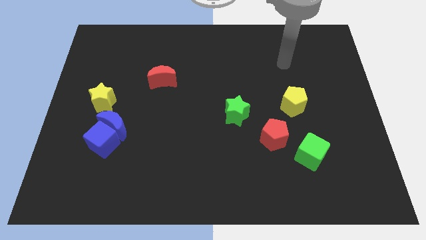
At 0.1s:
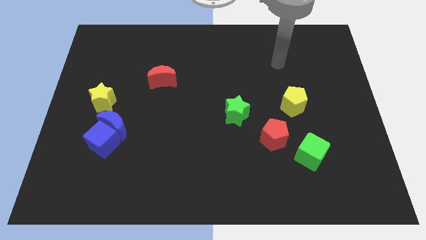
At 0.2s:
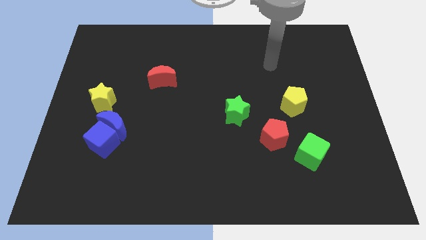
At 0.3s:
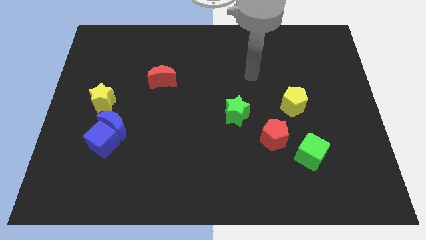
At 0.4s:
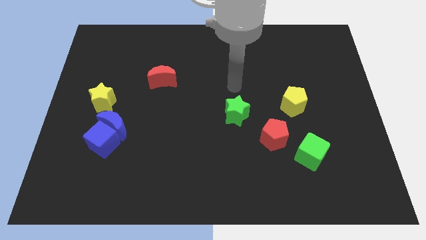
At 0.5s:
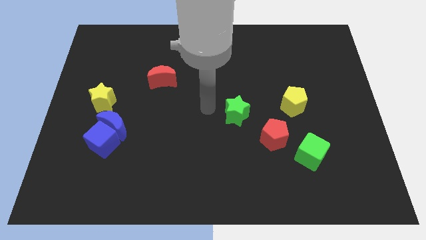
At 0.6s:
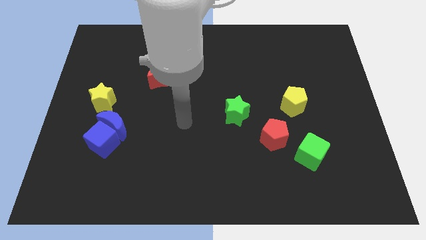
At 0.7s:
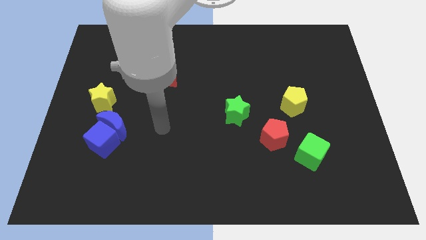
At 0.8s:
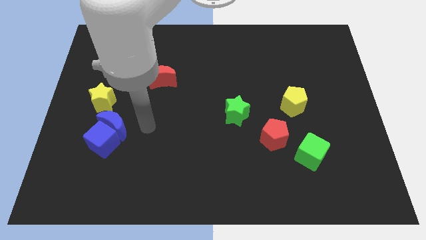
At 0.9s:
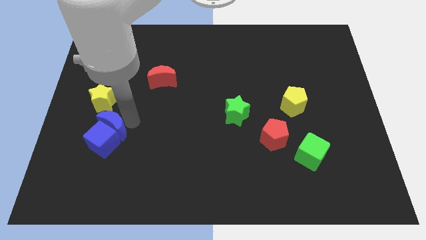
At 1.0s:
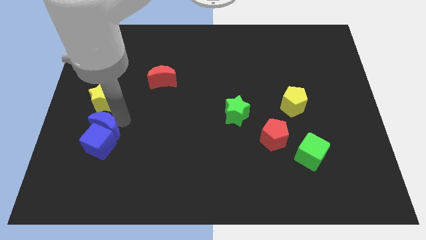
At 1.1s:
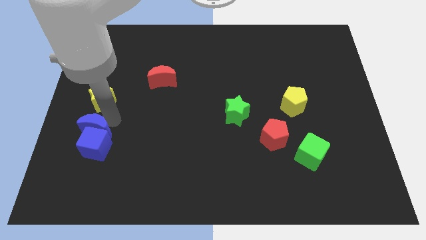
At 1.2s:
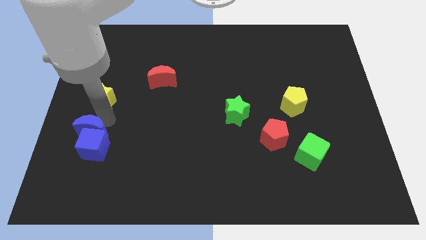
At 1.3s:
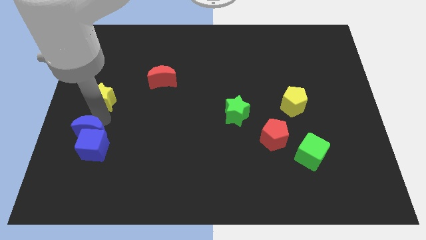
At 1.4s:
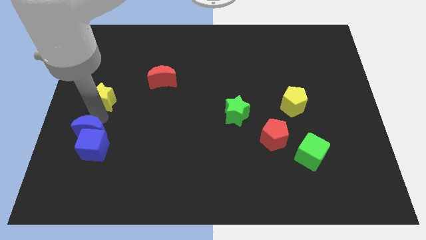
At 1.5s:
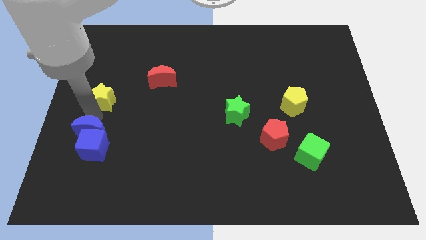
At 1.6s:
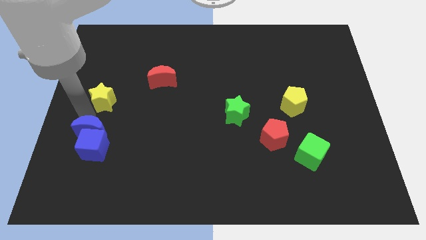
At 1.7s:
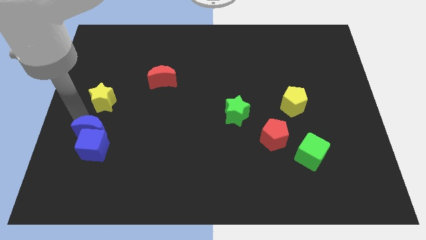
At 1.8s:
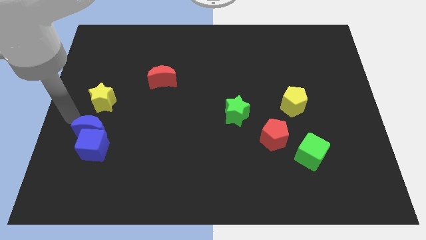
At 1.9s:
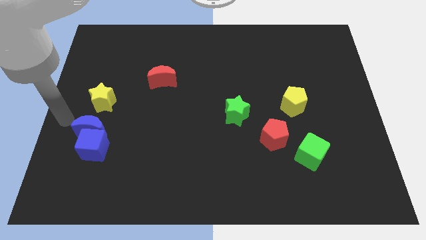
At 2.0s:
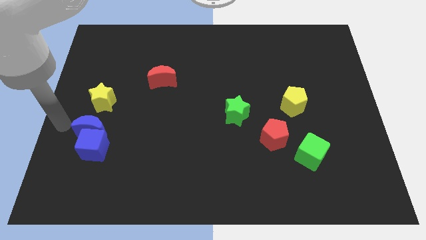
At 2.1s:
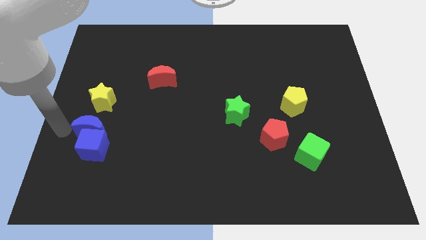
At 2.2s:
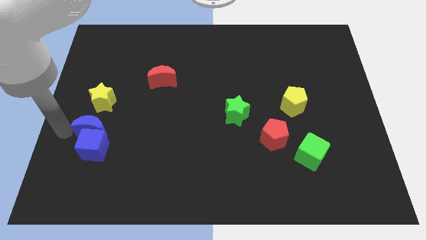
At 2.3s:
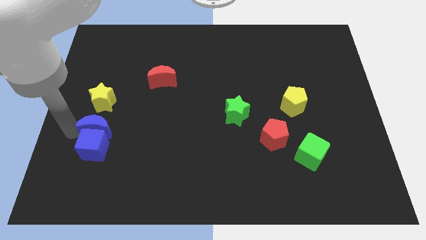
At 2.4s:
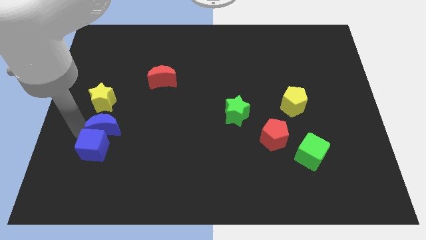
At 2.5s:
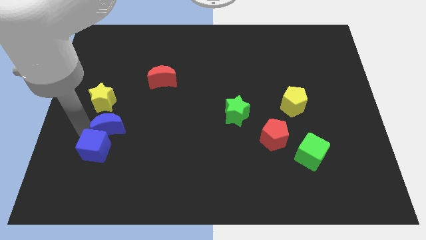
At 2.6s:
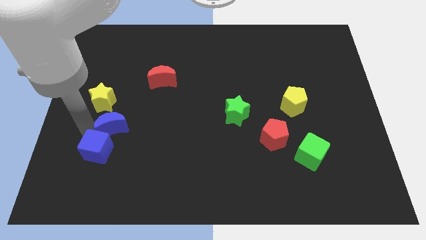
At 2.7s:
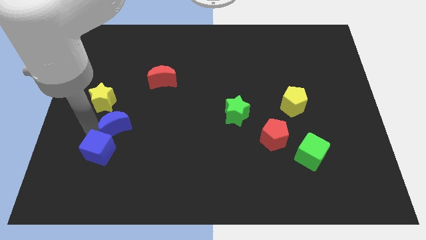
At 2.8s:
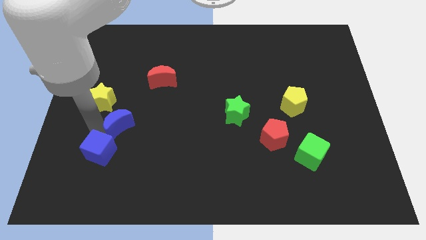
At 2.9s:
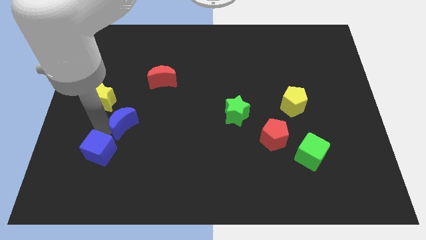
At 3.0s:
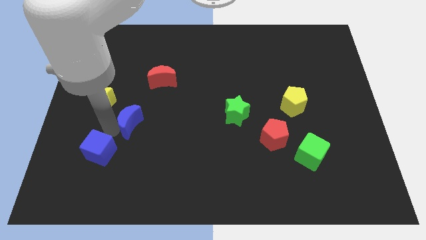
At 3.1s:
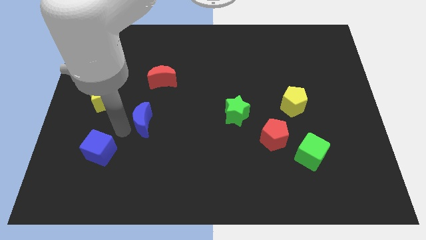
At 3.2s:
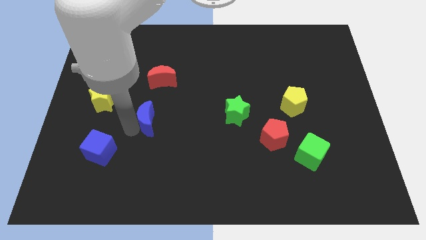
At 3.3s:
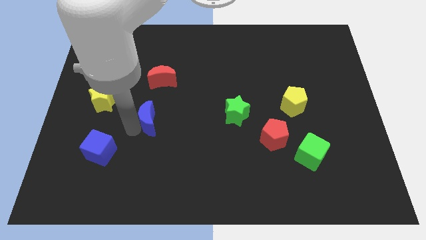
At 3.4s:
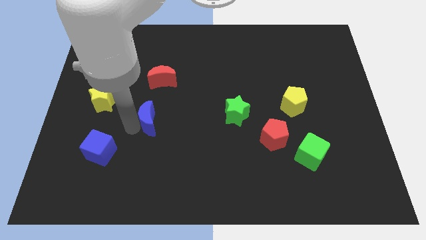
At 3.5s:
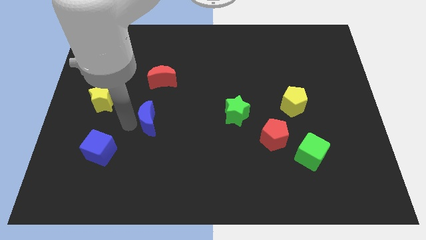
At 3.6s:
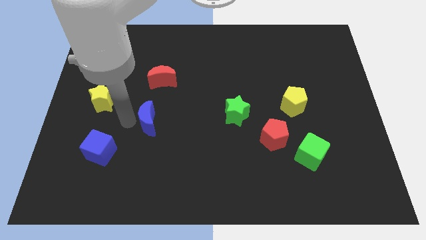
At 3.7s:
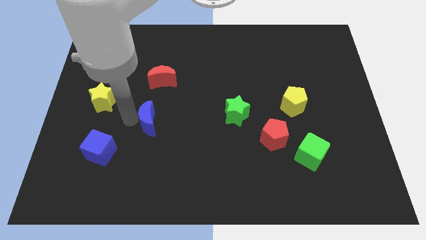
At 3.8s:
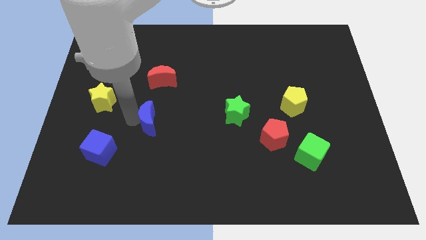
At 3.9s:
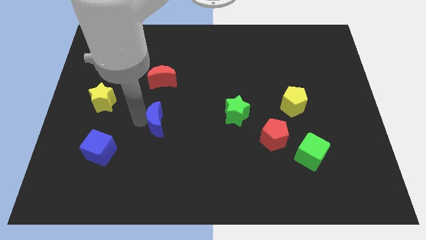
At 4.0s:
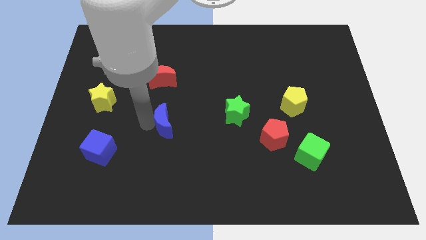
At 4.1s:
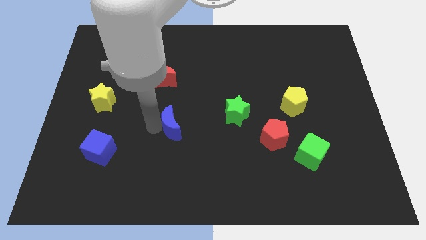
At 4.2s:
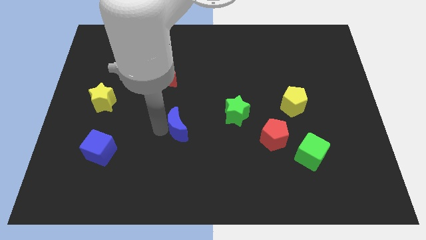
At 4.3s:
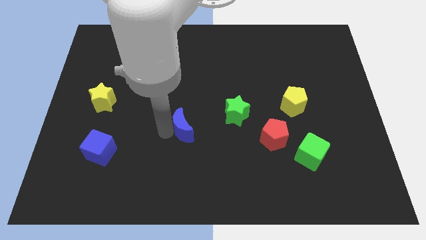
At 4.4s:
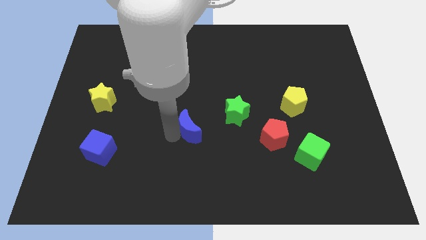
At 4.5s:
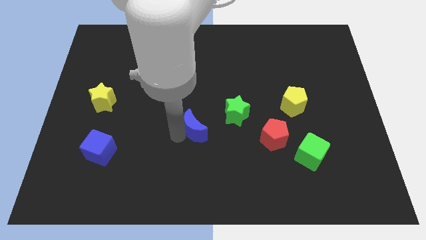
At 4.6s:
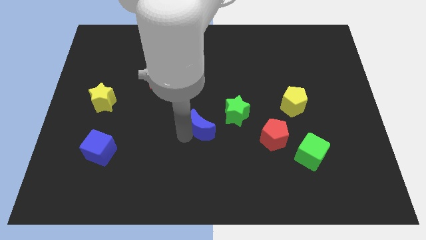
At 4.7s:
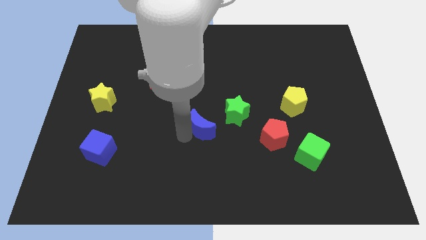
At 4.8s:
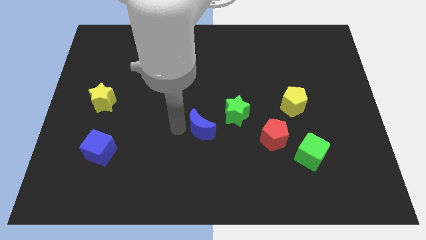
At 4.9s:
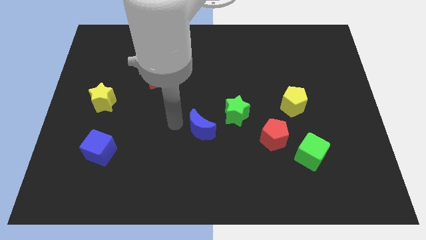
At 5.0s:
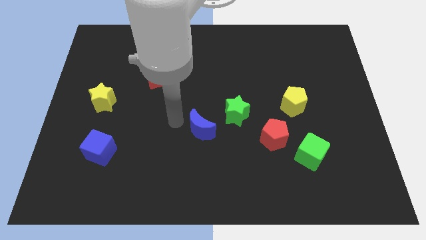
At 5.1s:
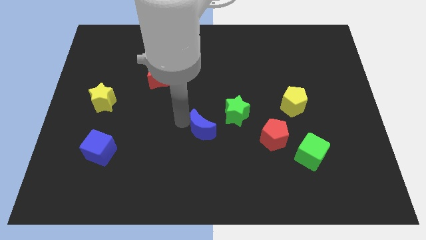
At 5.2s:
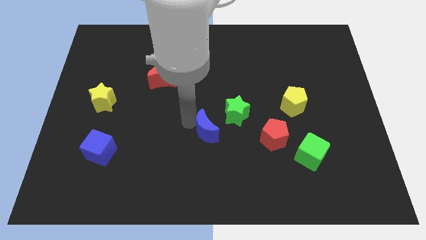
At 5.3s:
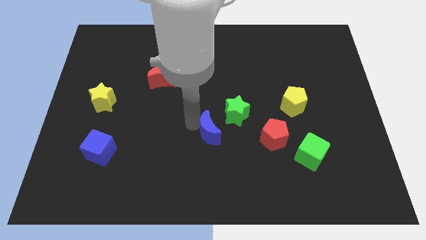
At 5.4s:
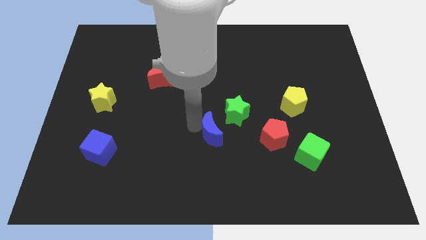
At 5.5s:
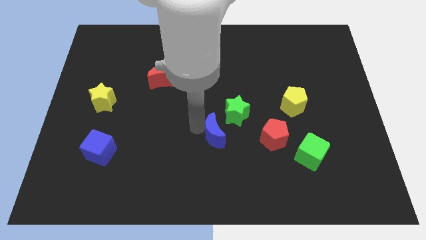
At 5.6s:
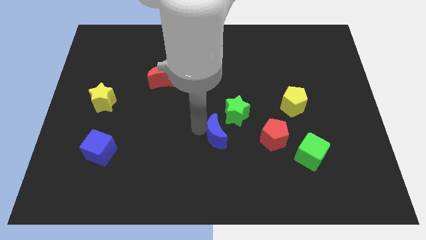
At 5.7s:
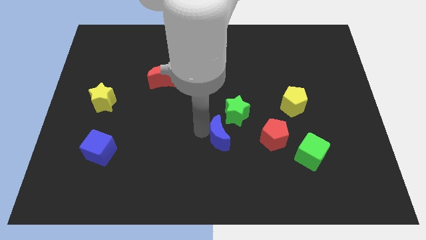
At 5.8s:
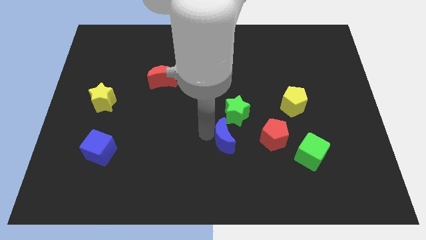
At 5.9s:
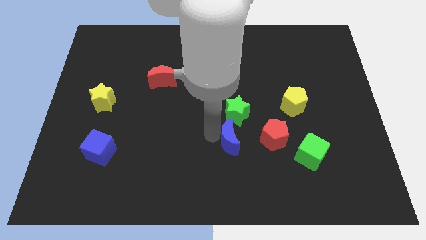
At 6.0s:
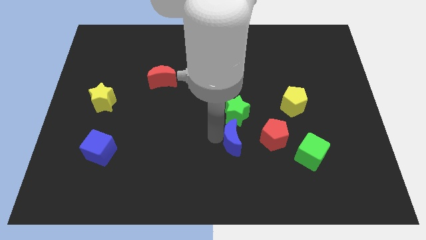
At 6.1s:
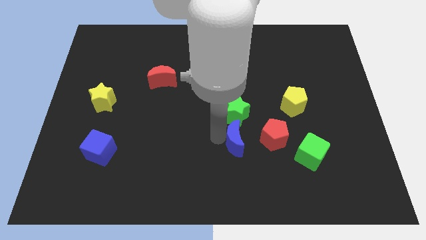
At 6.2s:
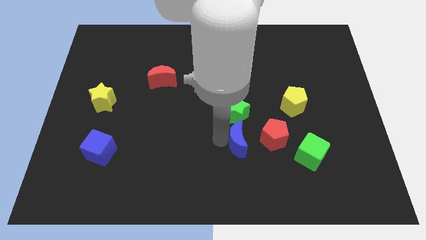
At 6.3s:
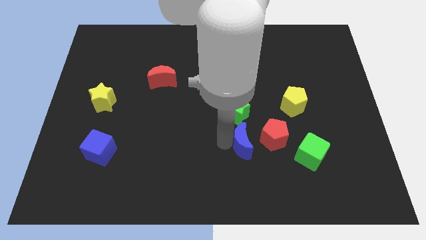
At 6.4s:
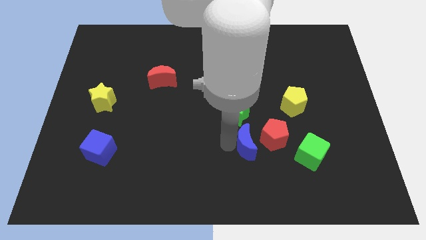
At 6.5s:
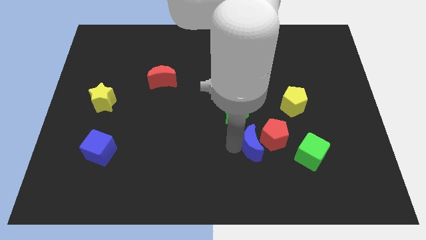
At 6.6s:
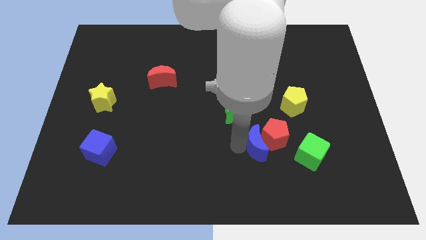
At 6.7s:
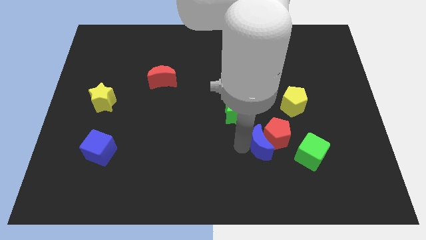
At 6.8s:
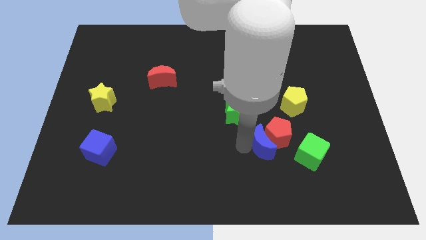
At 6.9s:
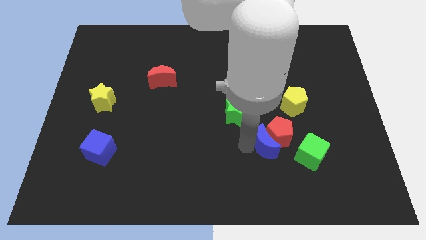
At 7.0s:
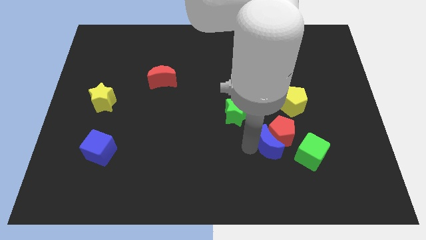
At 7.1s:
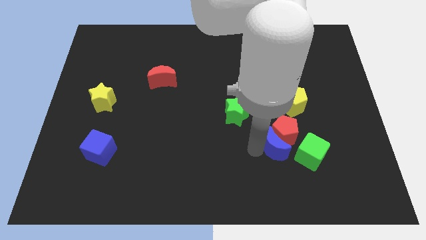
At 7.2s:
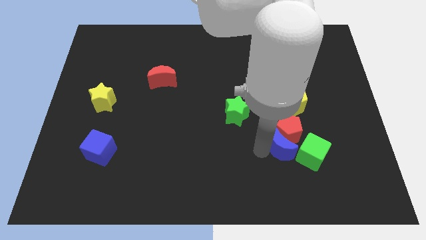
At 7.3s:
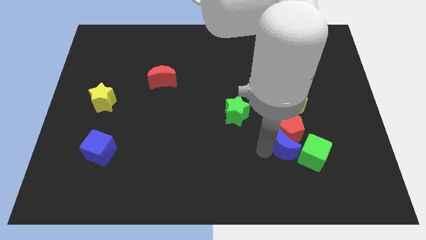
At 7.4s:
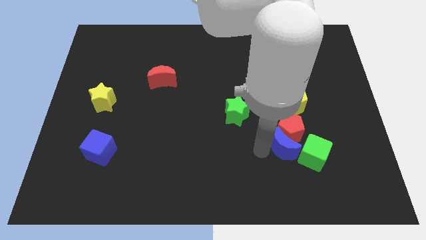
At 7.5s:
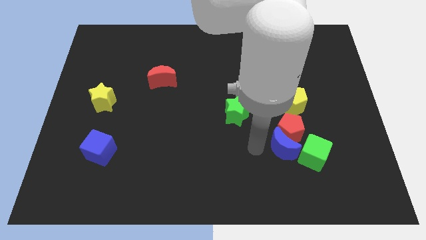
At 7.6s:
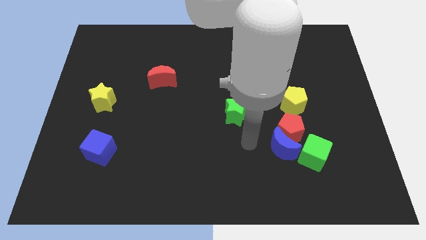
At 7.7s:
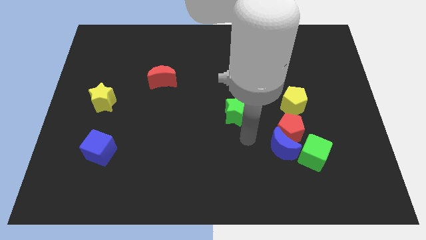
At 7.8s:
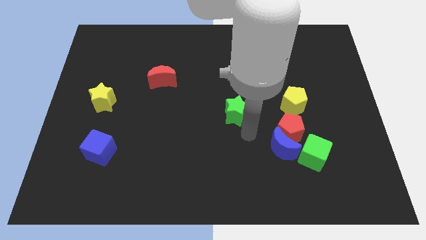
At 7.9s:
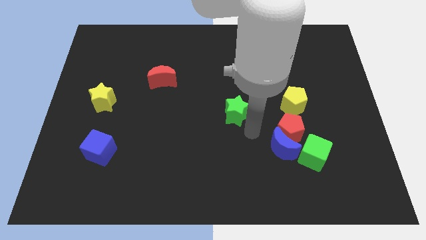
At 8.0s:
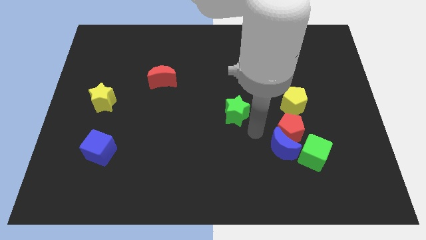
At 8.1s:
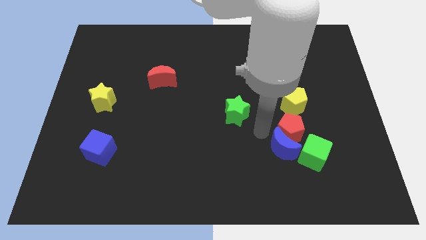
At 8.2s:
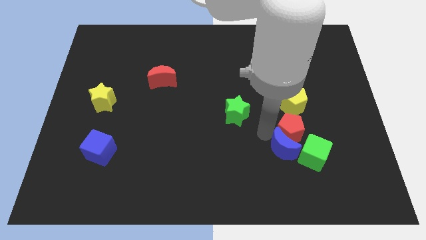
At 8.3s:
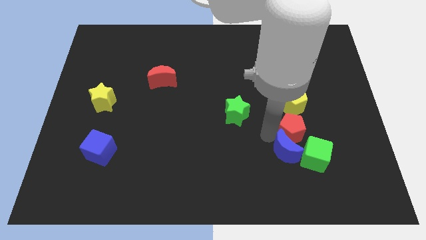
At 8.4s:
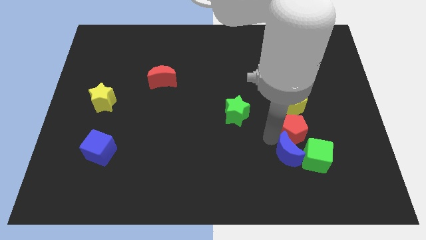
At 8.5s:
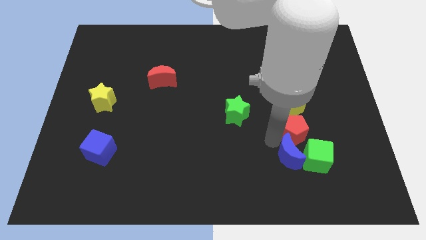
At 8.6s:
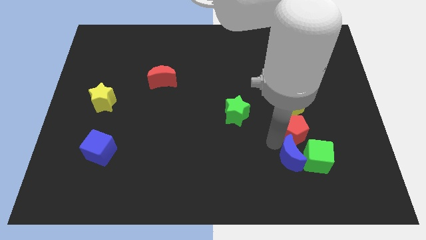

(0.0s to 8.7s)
slide the blue moon towards the green cube
